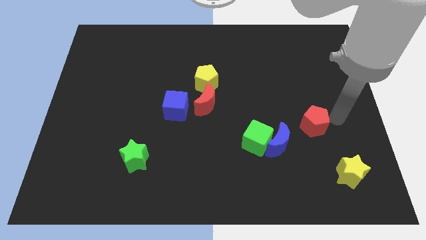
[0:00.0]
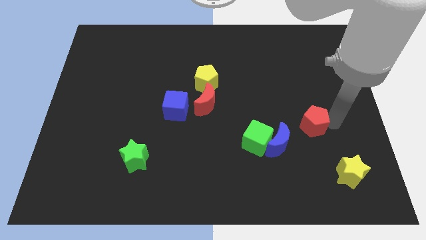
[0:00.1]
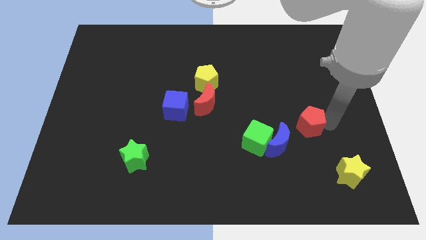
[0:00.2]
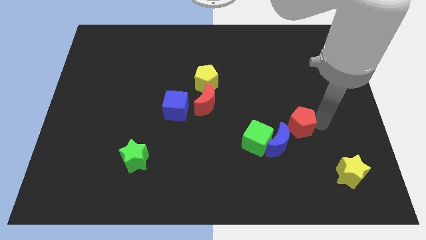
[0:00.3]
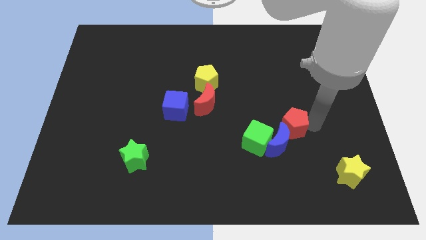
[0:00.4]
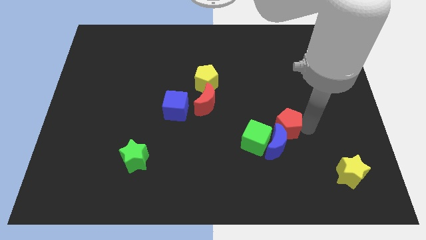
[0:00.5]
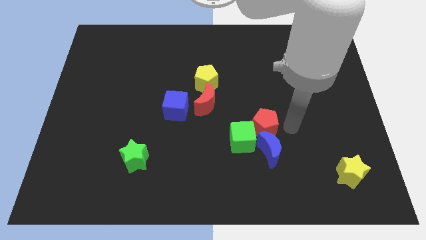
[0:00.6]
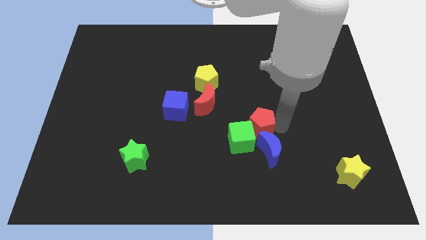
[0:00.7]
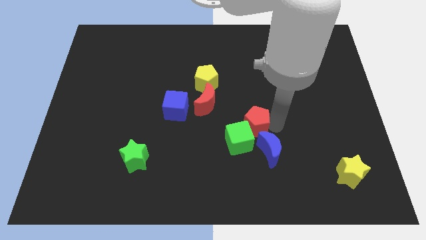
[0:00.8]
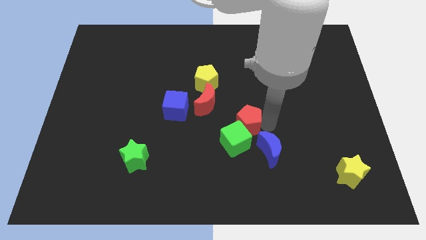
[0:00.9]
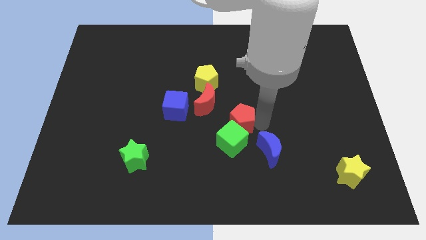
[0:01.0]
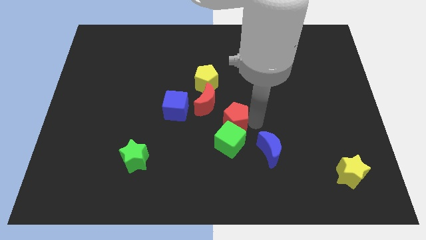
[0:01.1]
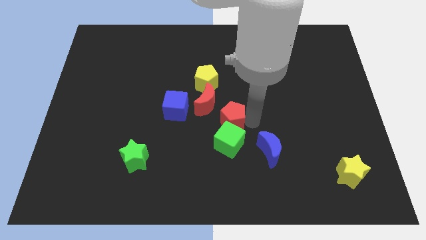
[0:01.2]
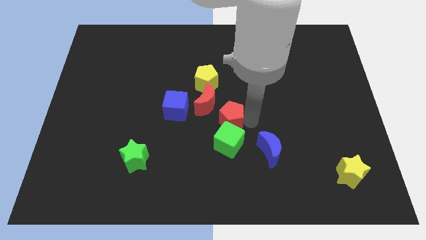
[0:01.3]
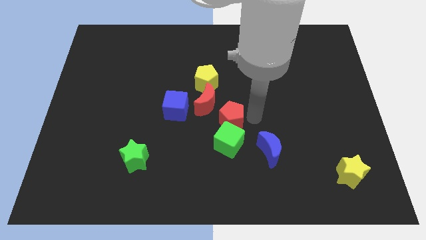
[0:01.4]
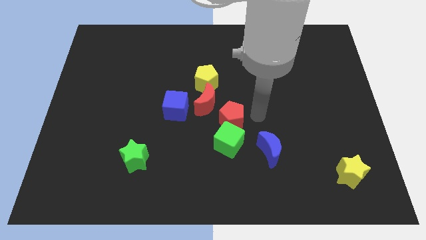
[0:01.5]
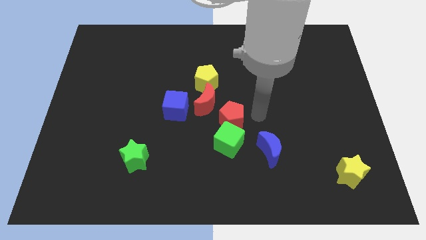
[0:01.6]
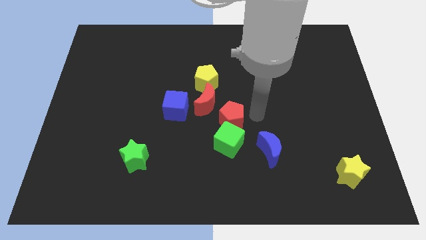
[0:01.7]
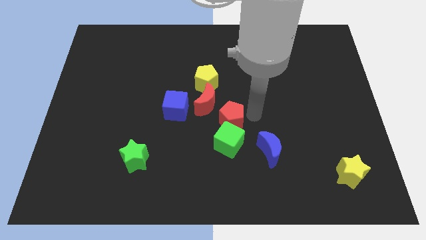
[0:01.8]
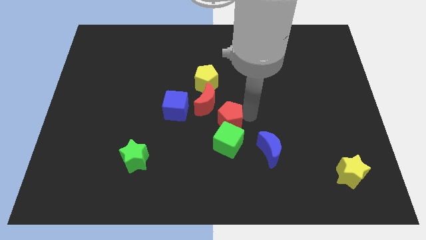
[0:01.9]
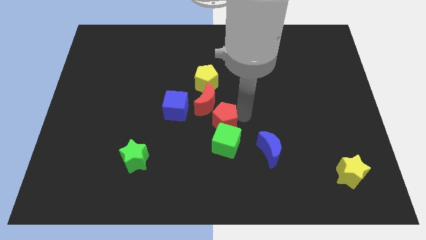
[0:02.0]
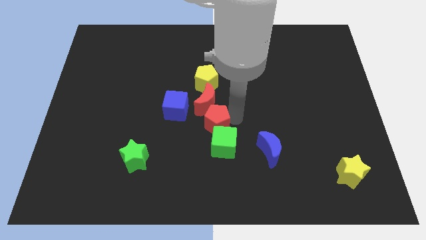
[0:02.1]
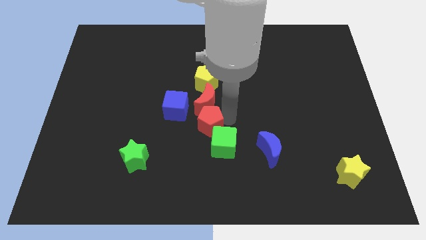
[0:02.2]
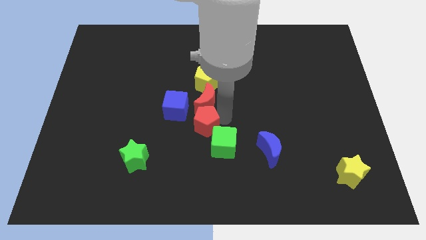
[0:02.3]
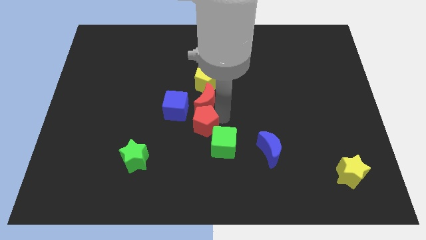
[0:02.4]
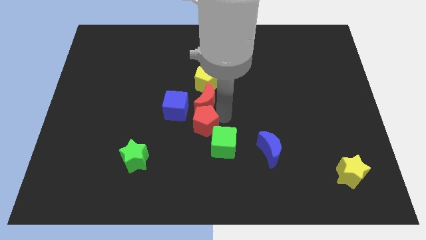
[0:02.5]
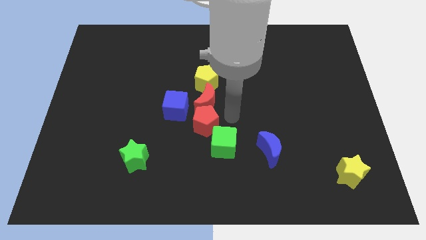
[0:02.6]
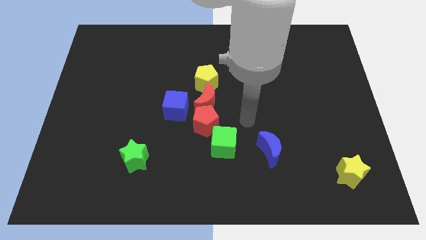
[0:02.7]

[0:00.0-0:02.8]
place the red pentagon below the red moon

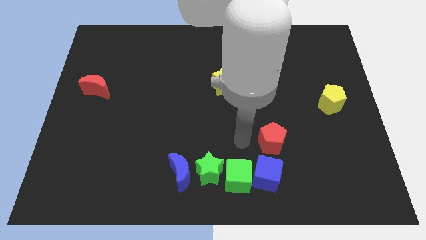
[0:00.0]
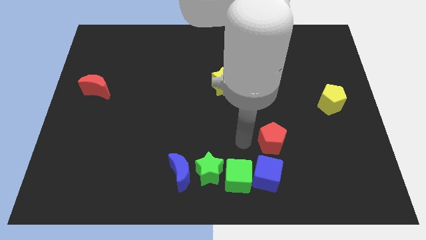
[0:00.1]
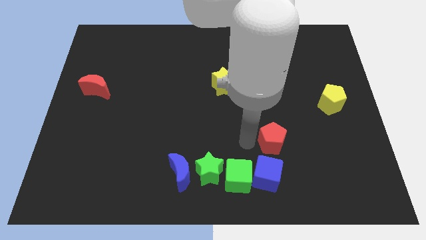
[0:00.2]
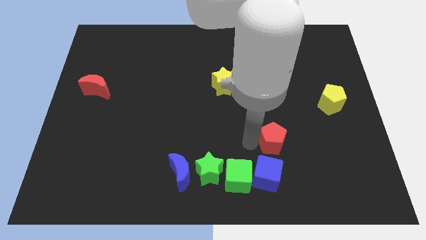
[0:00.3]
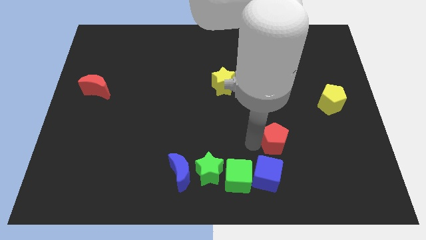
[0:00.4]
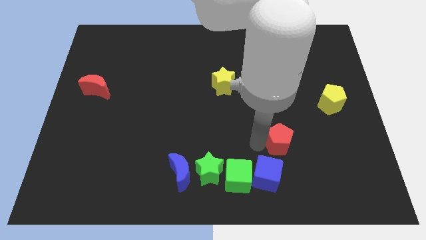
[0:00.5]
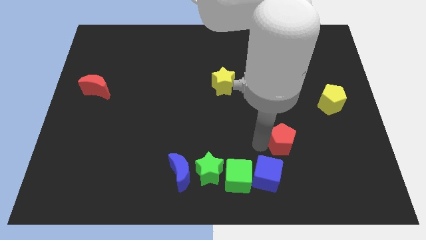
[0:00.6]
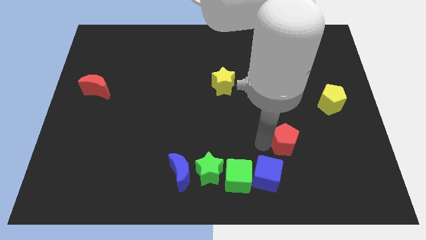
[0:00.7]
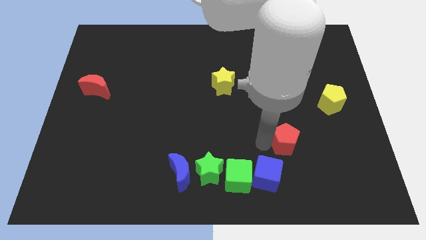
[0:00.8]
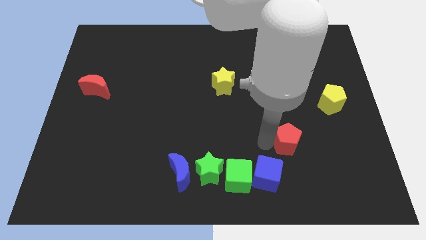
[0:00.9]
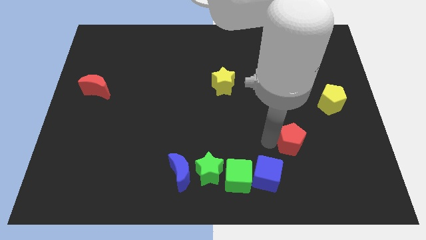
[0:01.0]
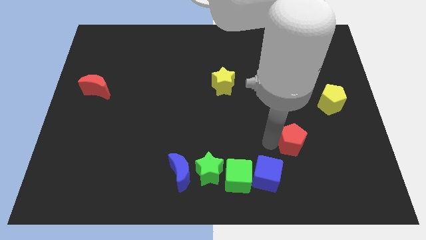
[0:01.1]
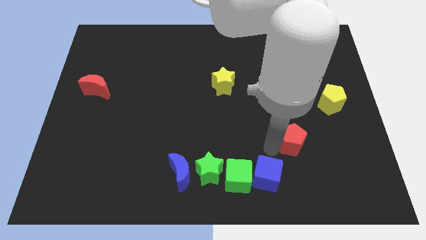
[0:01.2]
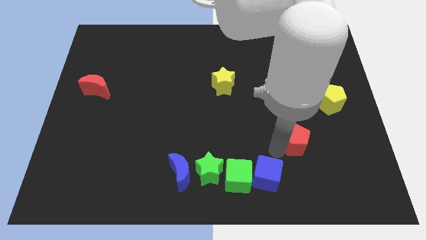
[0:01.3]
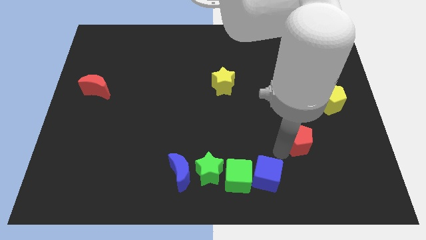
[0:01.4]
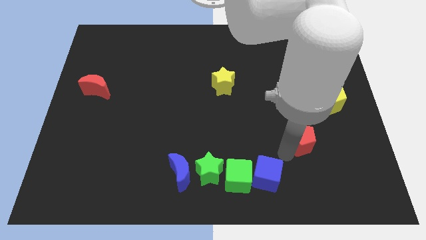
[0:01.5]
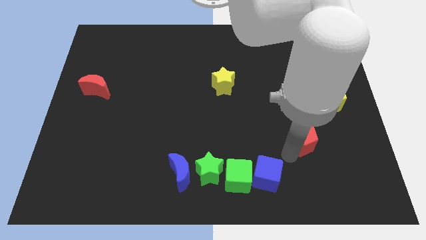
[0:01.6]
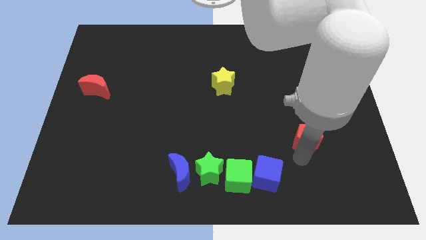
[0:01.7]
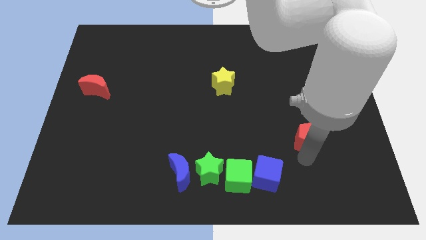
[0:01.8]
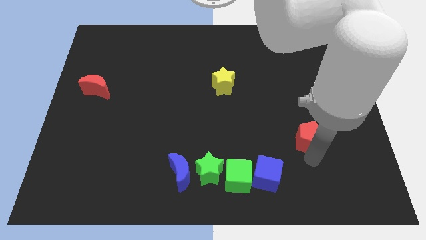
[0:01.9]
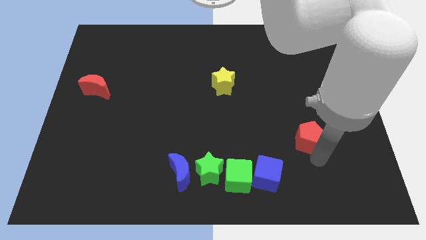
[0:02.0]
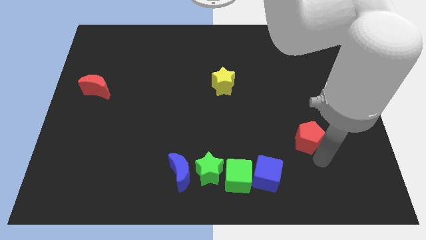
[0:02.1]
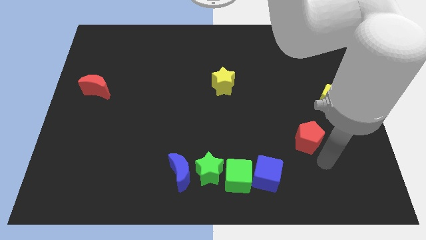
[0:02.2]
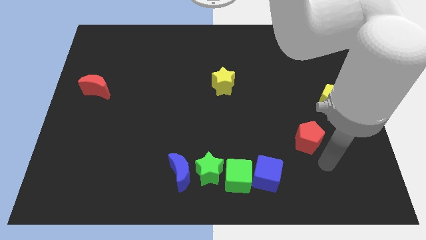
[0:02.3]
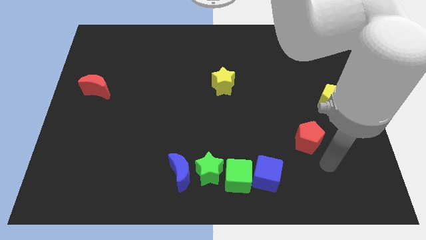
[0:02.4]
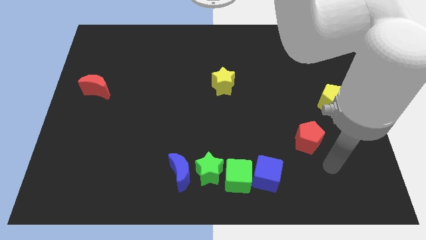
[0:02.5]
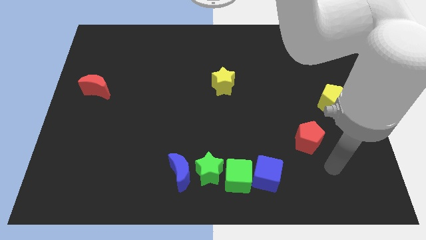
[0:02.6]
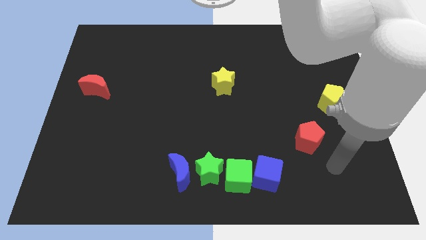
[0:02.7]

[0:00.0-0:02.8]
slide the red pentagon between blue cube and yellow pentagon

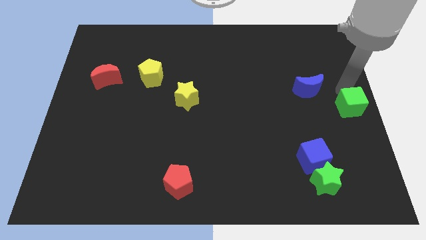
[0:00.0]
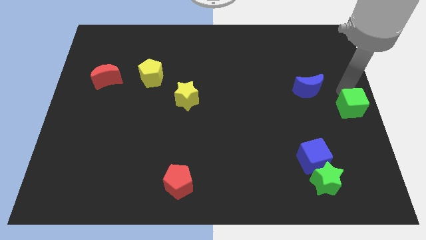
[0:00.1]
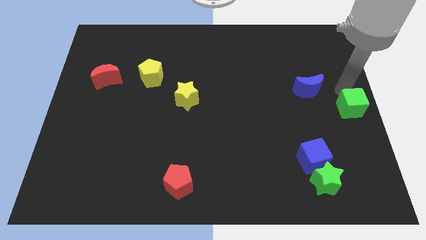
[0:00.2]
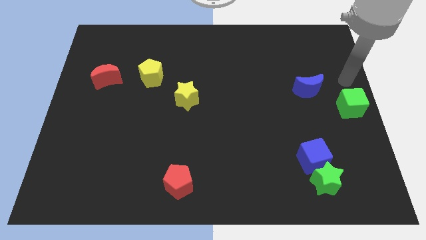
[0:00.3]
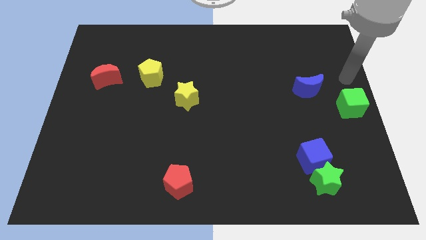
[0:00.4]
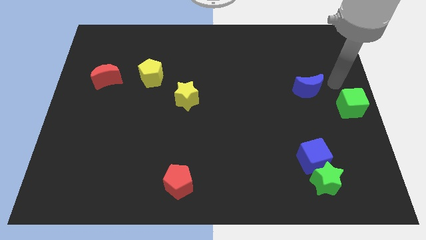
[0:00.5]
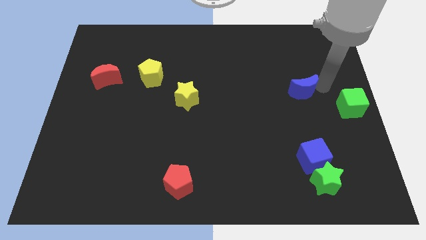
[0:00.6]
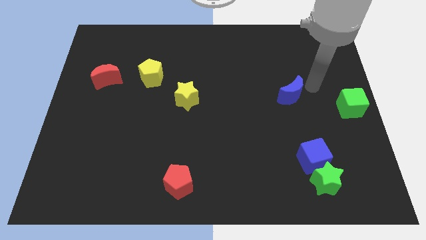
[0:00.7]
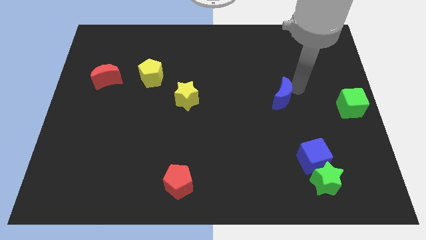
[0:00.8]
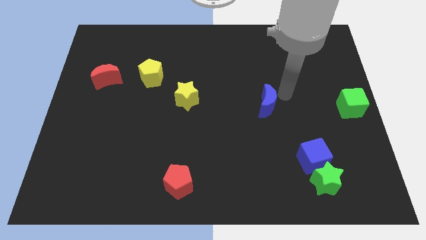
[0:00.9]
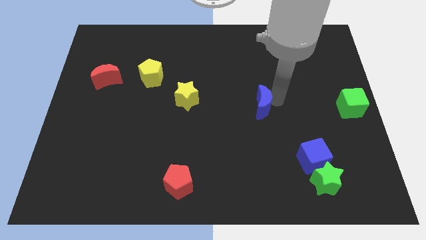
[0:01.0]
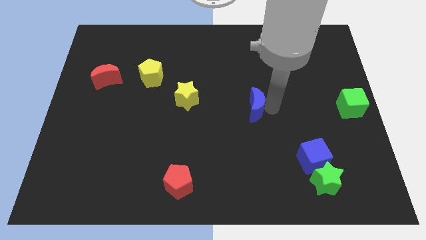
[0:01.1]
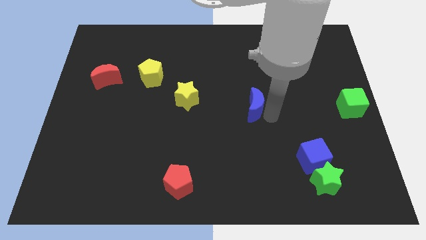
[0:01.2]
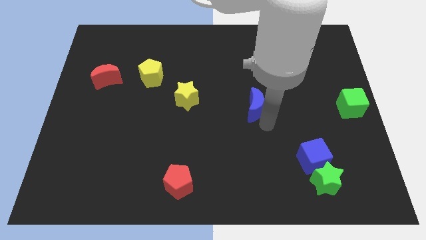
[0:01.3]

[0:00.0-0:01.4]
push the blue moon to the right side of the yellow star

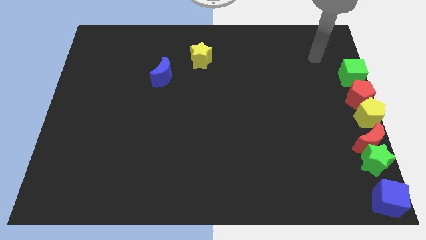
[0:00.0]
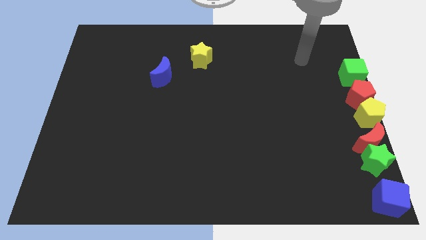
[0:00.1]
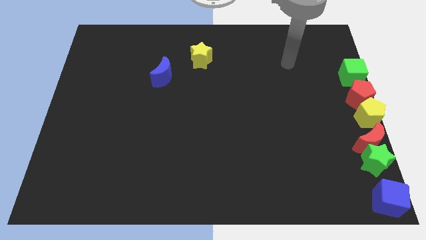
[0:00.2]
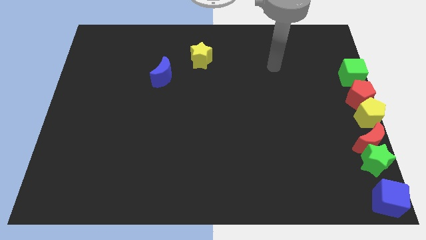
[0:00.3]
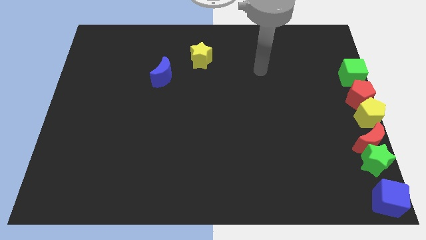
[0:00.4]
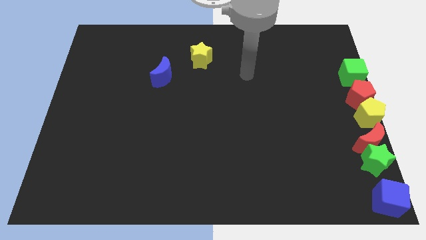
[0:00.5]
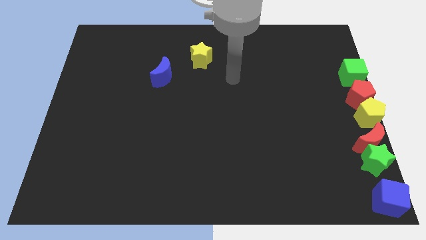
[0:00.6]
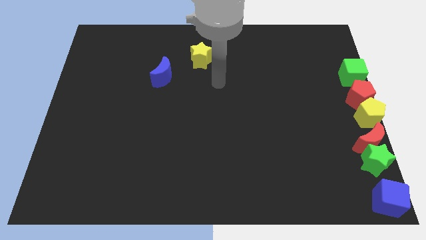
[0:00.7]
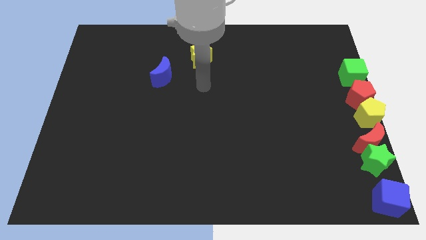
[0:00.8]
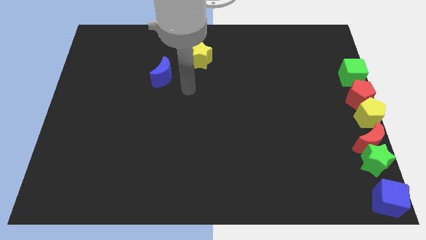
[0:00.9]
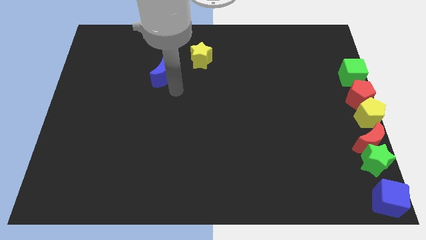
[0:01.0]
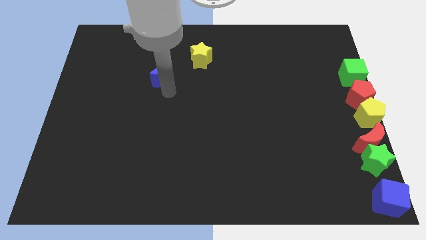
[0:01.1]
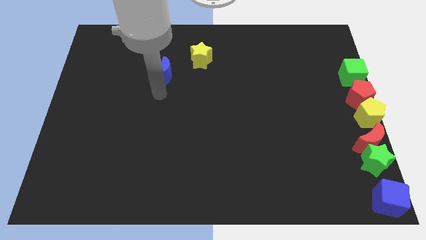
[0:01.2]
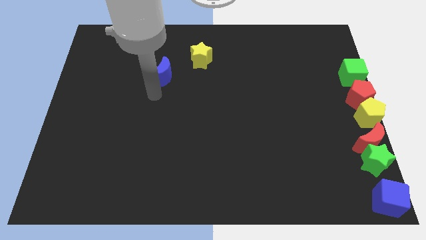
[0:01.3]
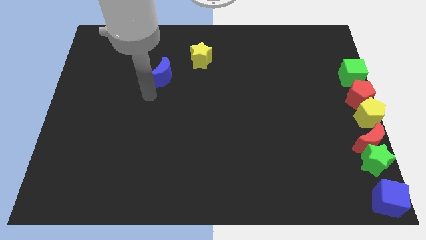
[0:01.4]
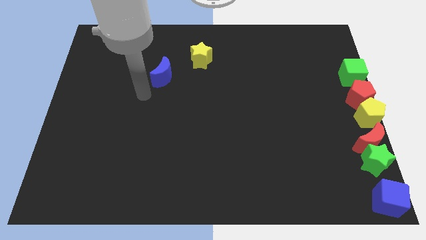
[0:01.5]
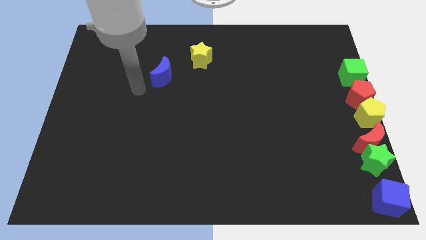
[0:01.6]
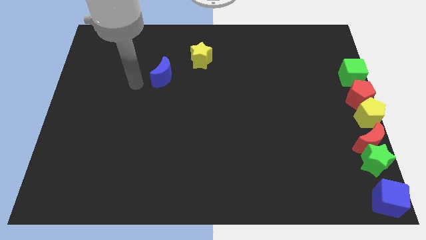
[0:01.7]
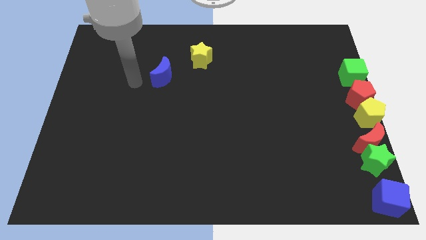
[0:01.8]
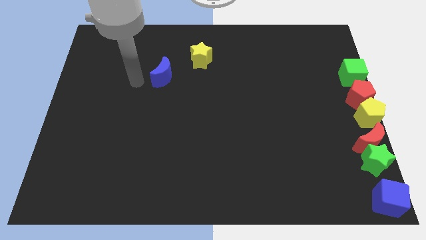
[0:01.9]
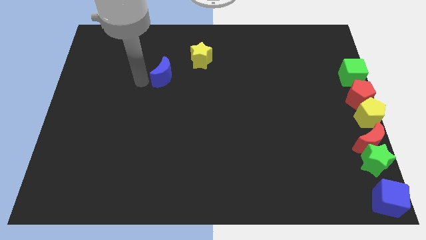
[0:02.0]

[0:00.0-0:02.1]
move the arm close to the blue moon

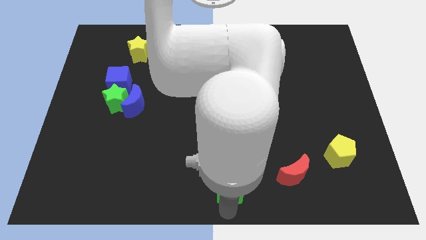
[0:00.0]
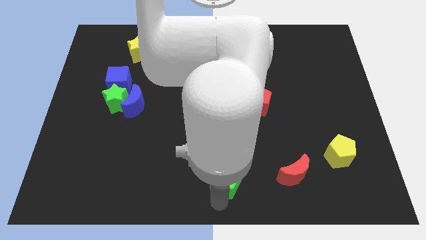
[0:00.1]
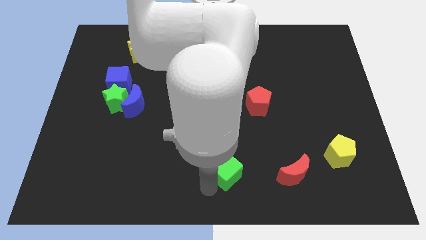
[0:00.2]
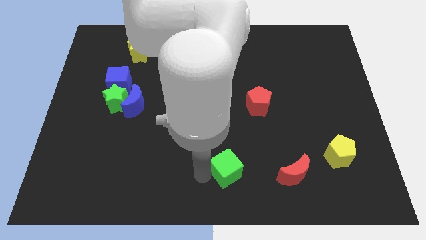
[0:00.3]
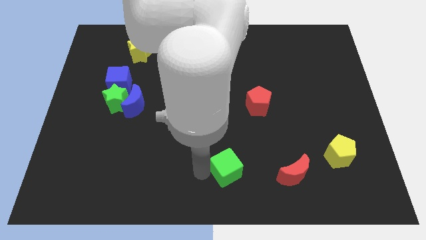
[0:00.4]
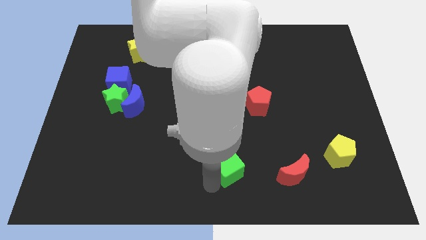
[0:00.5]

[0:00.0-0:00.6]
point your arm left to green cube
